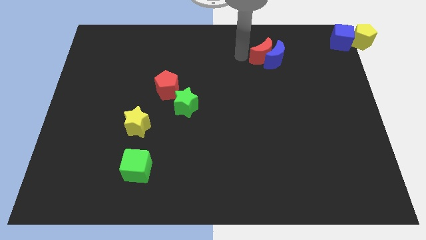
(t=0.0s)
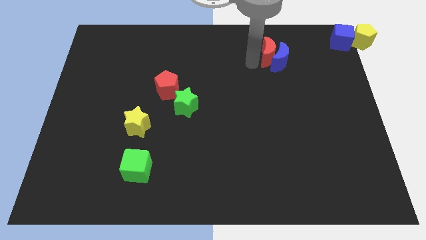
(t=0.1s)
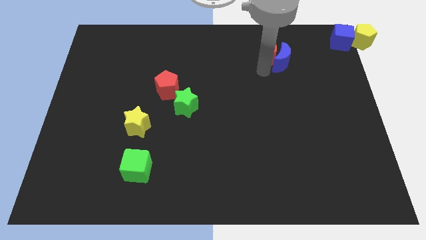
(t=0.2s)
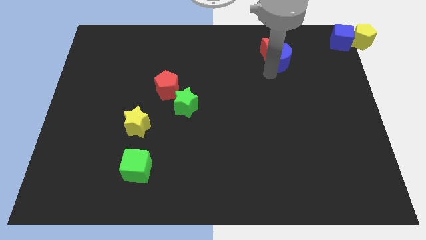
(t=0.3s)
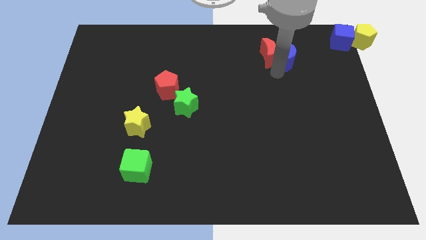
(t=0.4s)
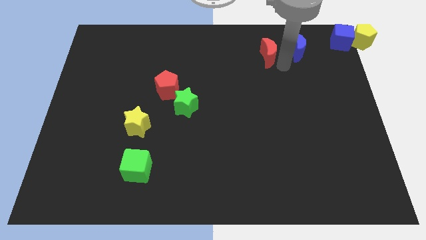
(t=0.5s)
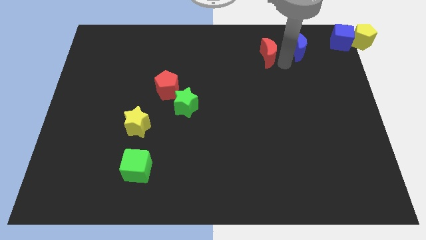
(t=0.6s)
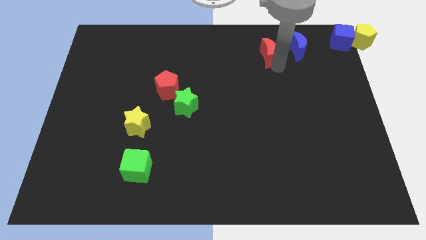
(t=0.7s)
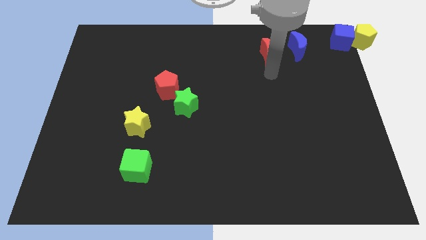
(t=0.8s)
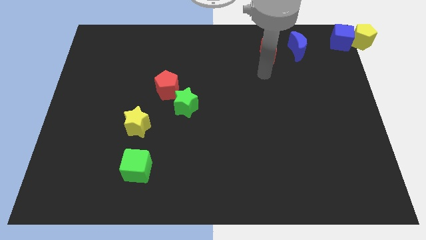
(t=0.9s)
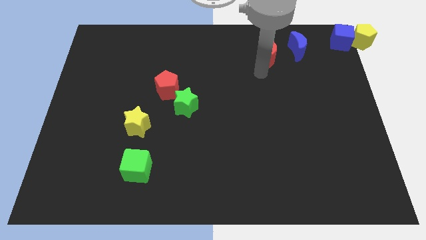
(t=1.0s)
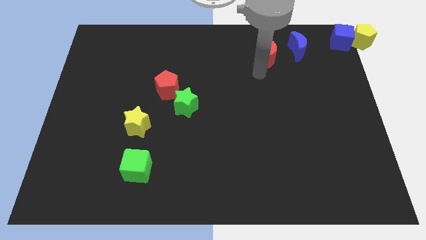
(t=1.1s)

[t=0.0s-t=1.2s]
separate the blue crescent and red crescent

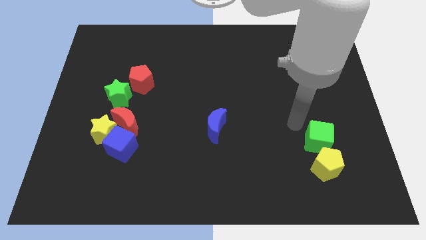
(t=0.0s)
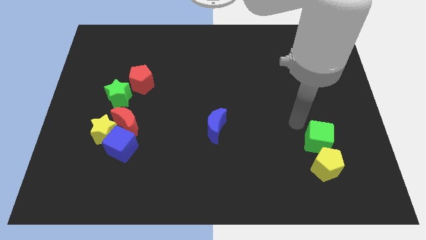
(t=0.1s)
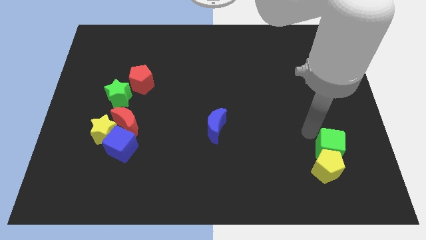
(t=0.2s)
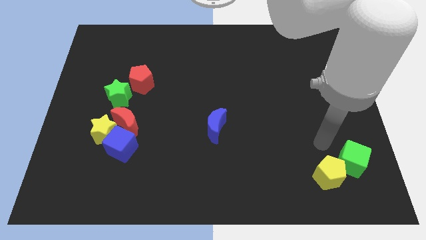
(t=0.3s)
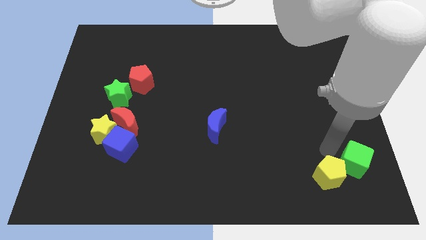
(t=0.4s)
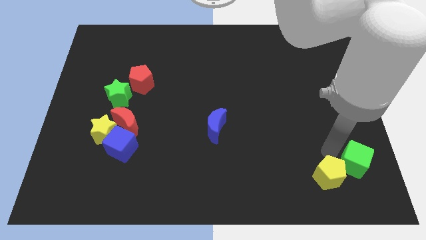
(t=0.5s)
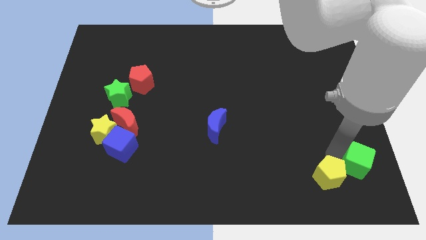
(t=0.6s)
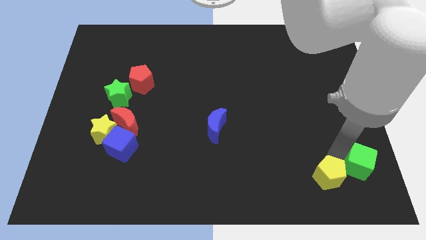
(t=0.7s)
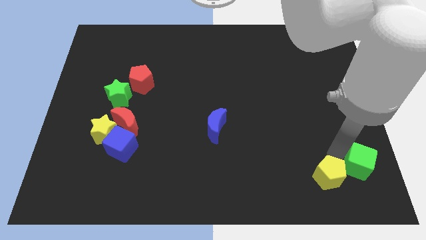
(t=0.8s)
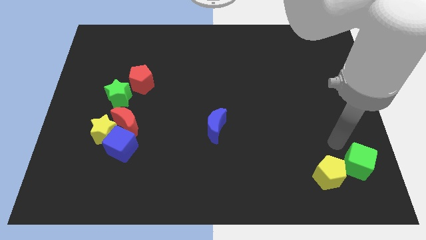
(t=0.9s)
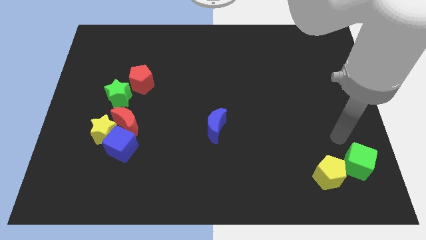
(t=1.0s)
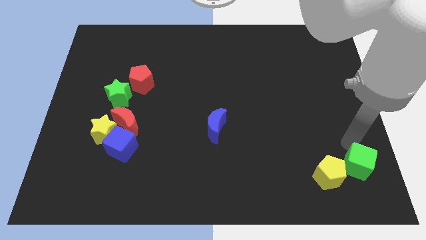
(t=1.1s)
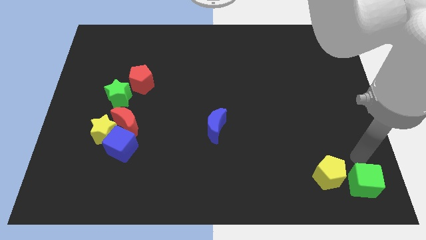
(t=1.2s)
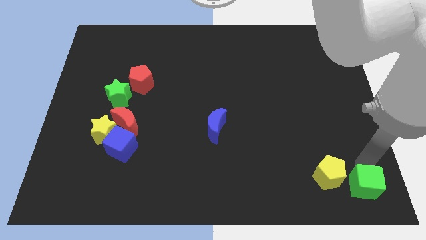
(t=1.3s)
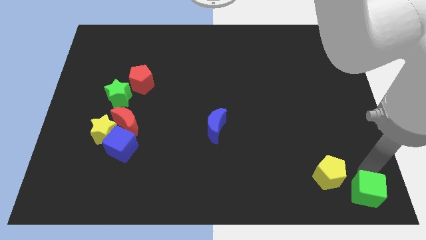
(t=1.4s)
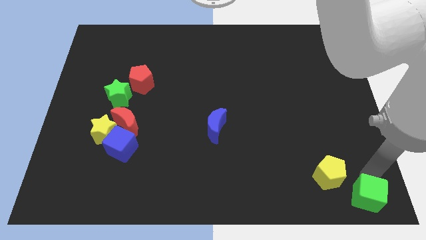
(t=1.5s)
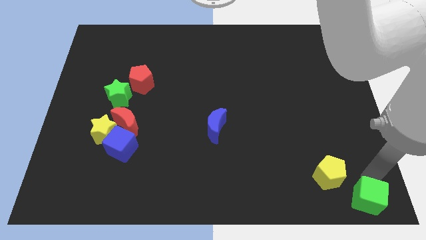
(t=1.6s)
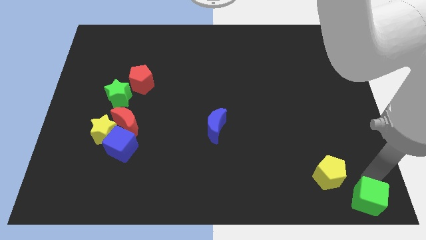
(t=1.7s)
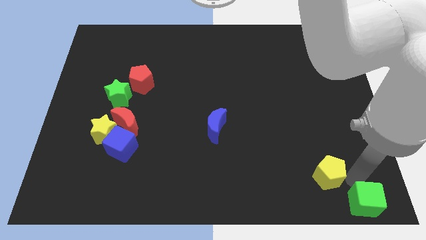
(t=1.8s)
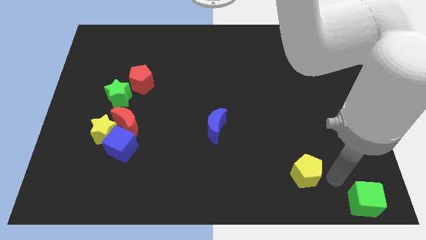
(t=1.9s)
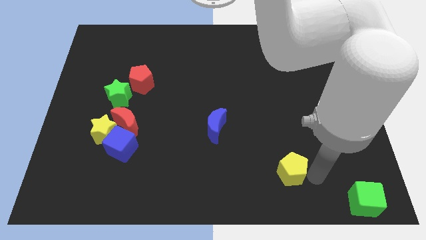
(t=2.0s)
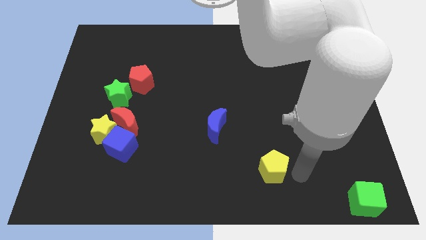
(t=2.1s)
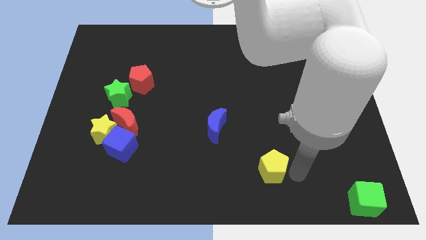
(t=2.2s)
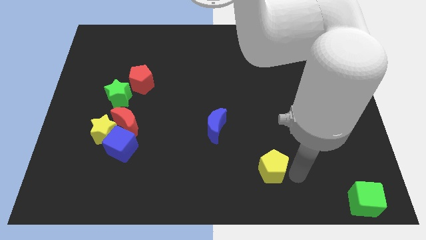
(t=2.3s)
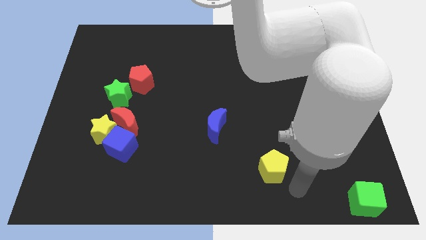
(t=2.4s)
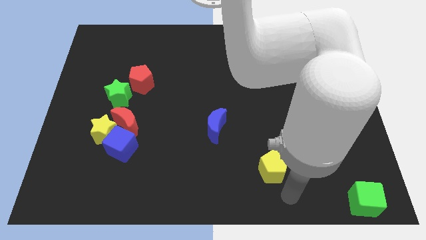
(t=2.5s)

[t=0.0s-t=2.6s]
separate the green cube and the yellow pentagon

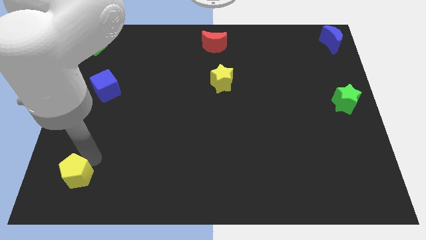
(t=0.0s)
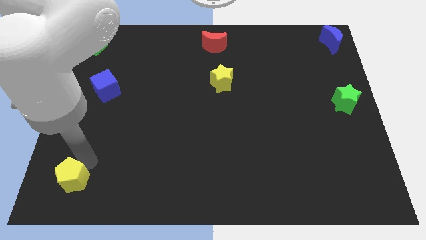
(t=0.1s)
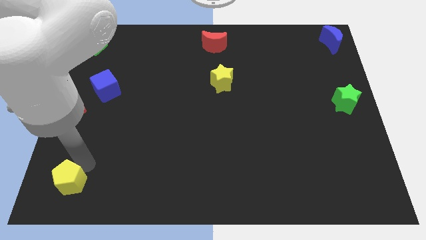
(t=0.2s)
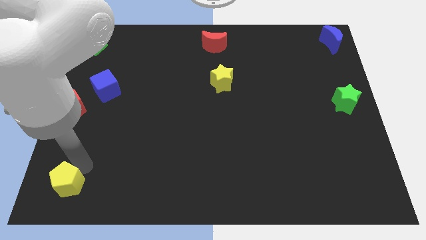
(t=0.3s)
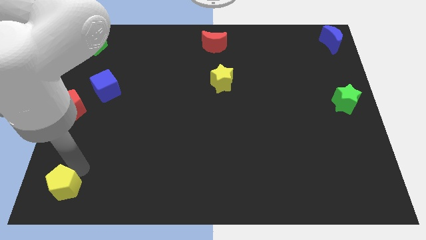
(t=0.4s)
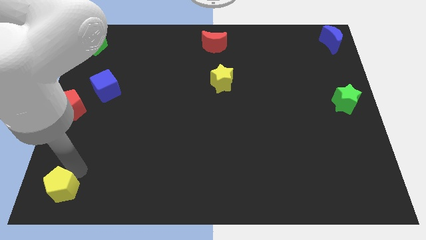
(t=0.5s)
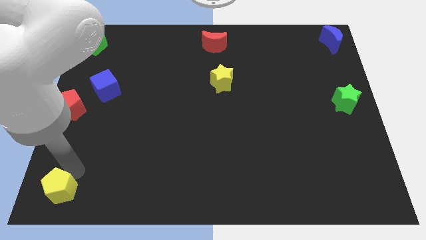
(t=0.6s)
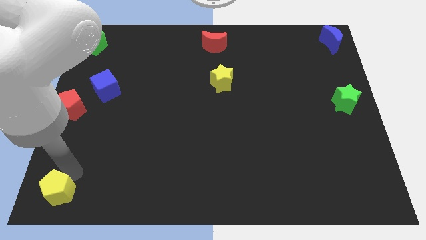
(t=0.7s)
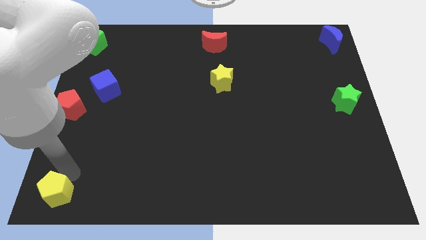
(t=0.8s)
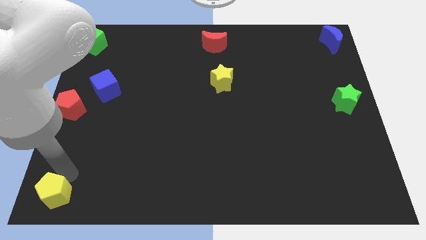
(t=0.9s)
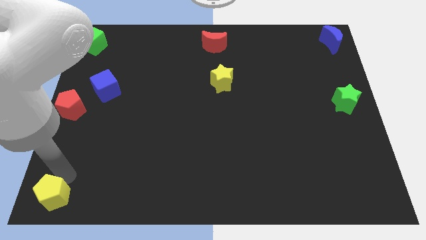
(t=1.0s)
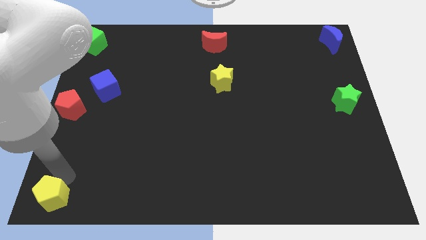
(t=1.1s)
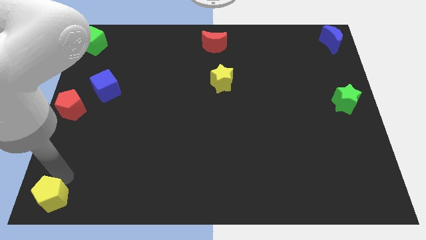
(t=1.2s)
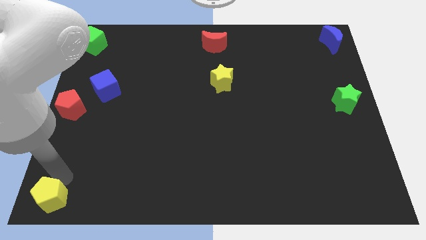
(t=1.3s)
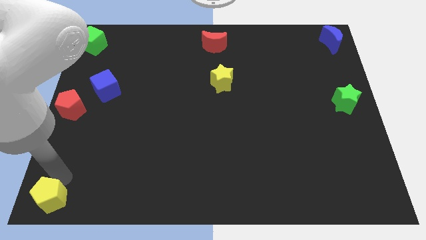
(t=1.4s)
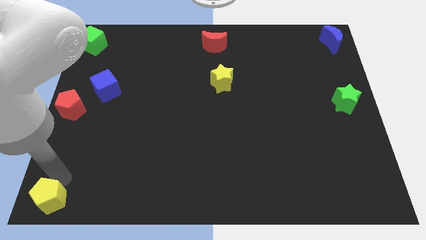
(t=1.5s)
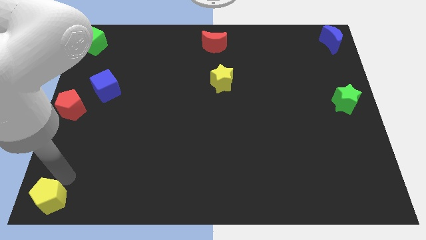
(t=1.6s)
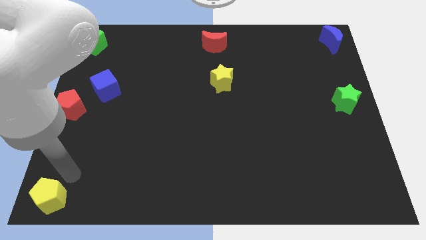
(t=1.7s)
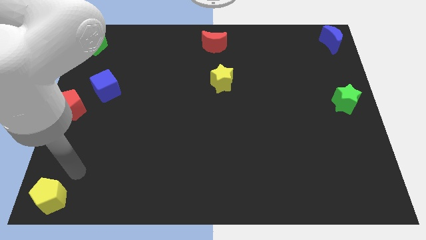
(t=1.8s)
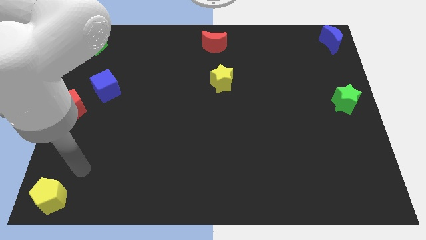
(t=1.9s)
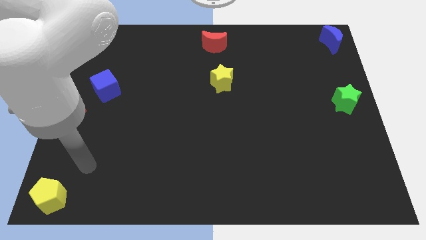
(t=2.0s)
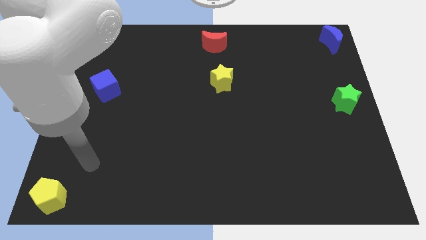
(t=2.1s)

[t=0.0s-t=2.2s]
move the yellow pentagon towards the bottom left side of the board

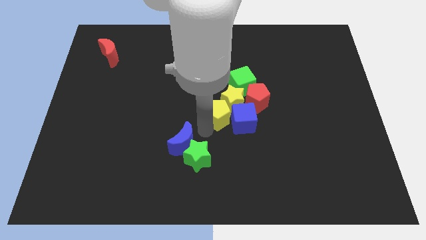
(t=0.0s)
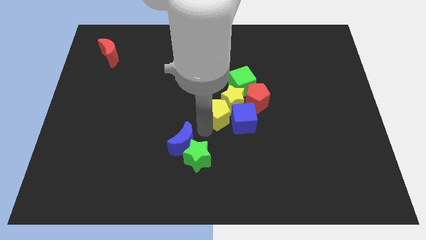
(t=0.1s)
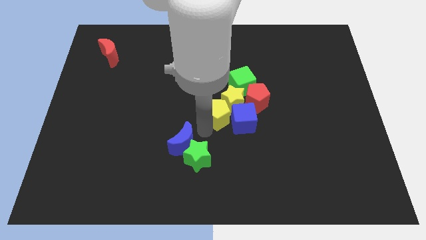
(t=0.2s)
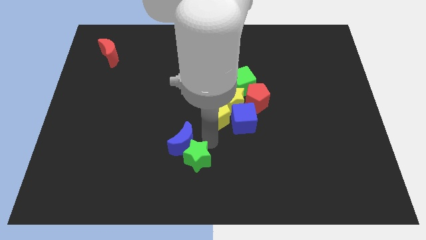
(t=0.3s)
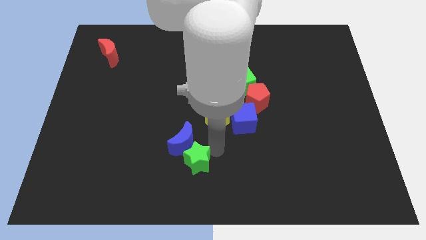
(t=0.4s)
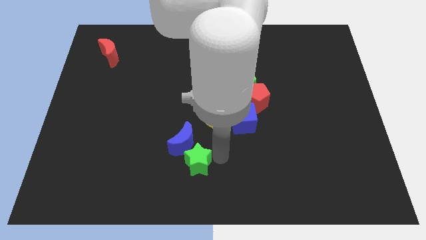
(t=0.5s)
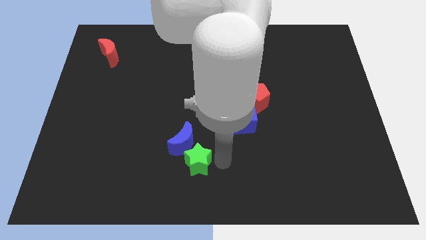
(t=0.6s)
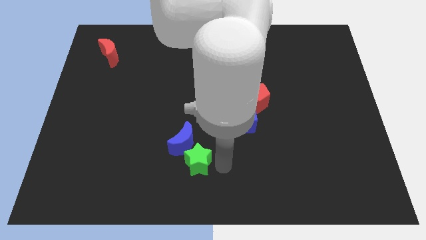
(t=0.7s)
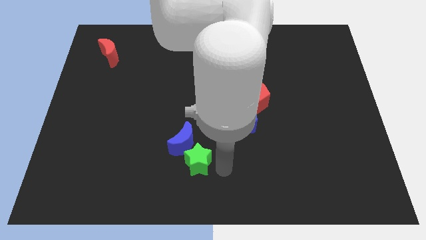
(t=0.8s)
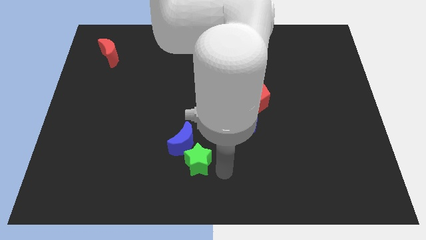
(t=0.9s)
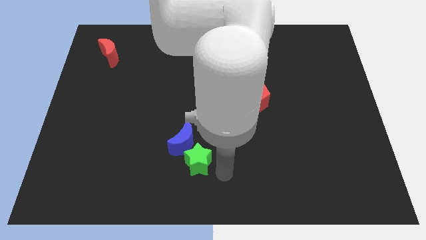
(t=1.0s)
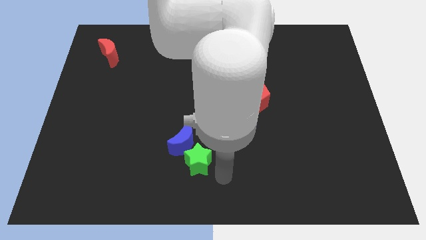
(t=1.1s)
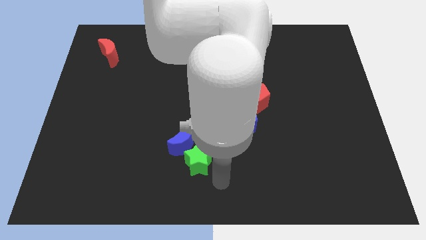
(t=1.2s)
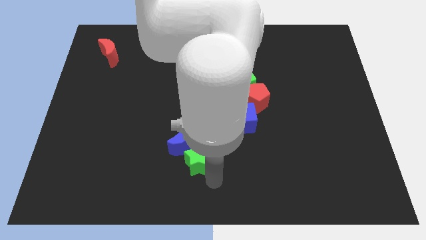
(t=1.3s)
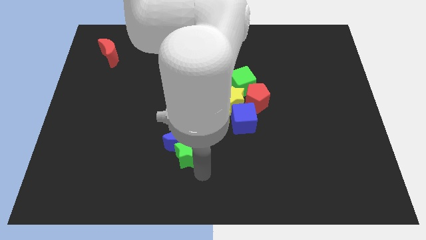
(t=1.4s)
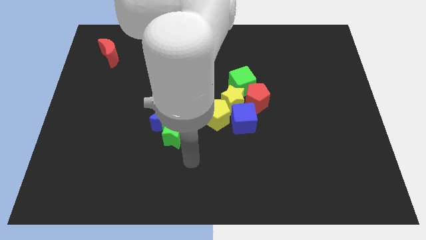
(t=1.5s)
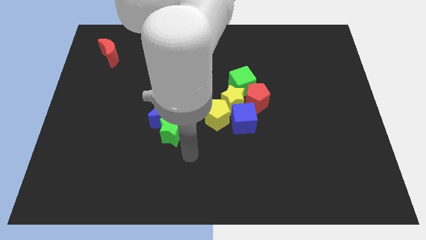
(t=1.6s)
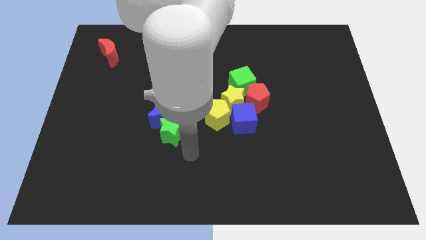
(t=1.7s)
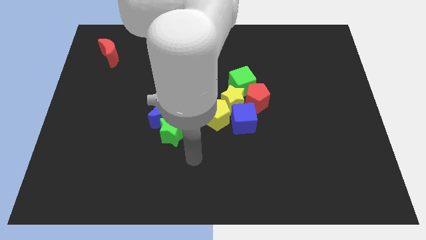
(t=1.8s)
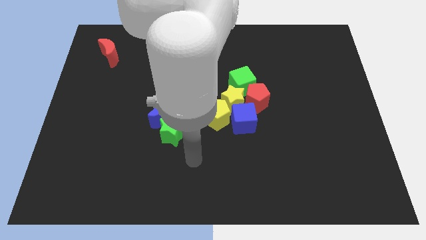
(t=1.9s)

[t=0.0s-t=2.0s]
move the arm away from the group of blocks

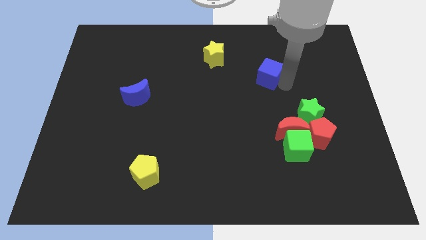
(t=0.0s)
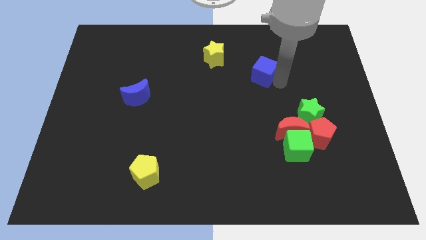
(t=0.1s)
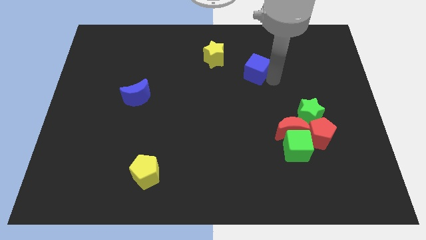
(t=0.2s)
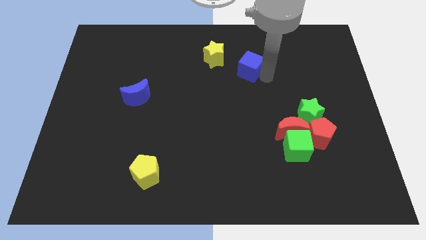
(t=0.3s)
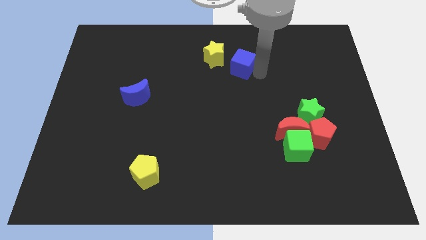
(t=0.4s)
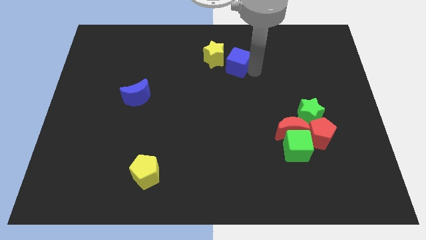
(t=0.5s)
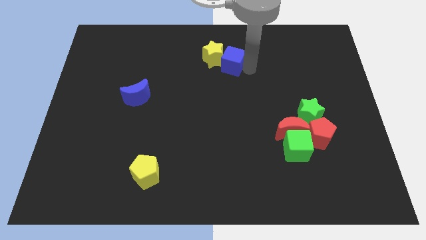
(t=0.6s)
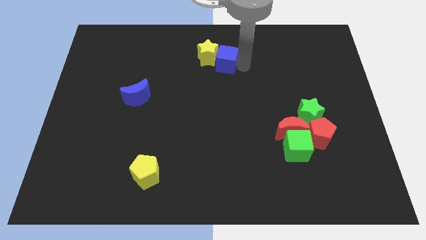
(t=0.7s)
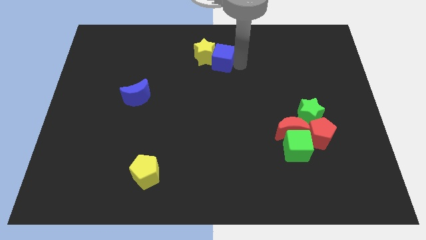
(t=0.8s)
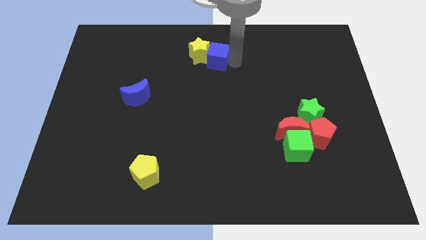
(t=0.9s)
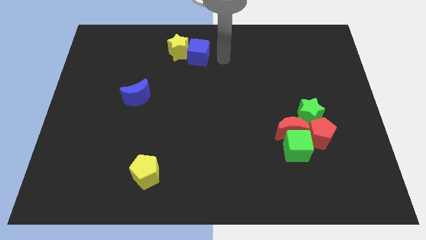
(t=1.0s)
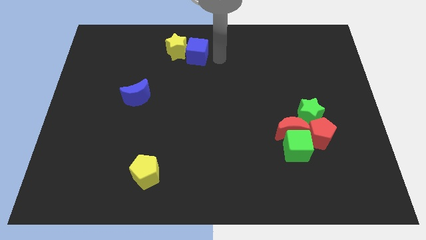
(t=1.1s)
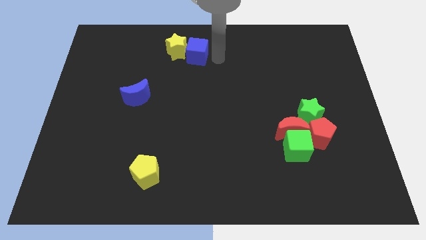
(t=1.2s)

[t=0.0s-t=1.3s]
push the blue cube in to the yellow star
